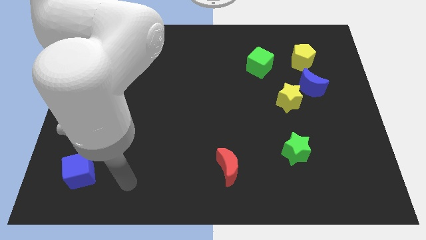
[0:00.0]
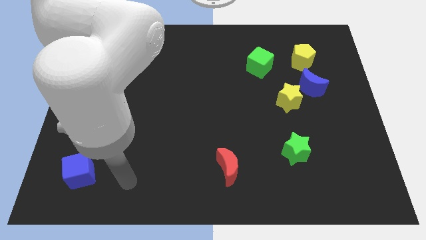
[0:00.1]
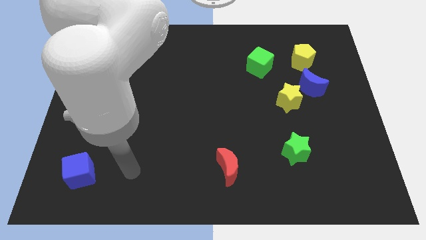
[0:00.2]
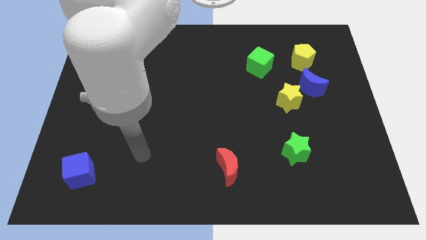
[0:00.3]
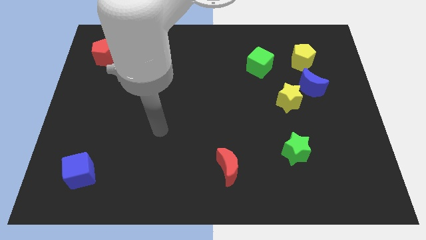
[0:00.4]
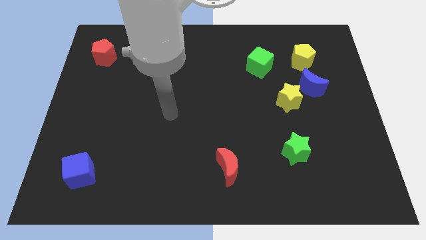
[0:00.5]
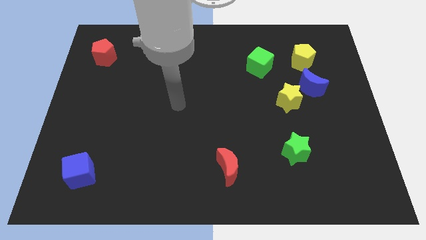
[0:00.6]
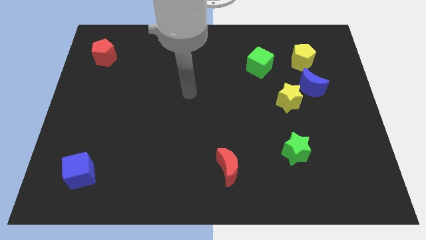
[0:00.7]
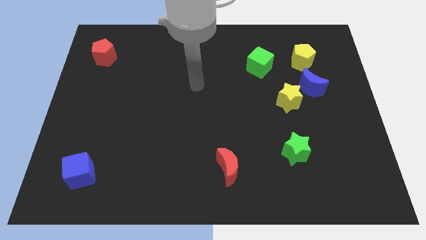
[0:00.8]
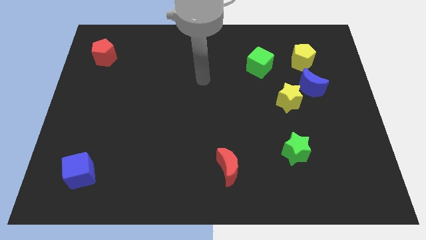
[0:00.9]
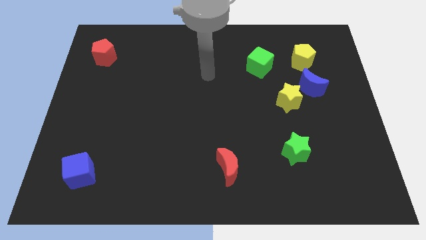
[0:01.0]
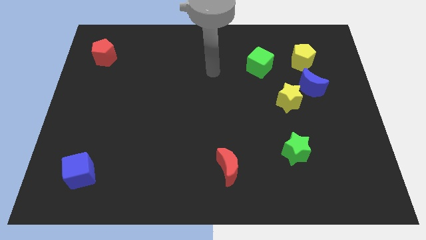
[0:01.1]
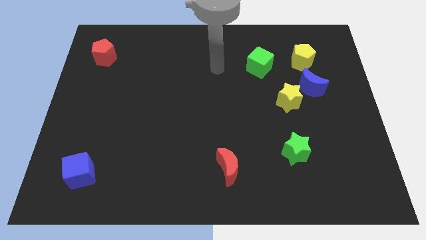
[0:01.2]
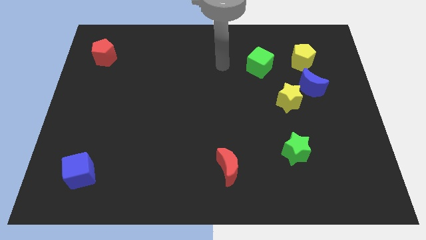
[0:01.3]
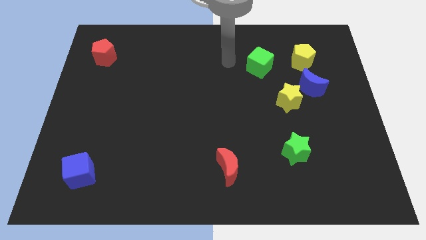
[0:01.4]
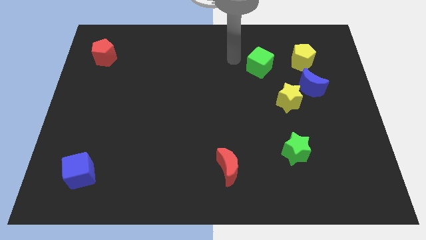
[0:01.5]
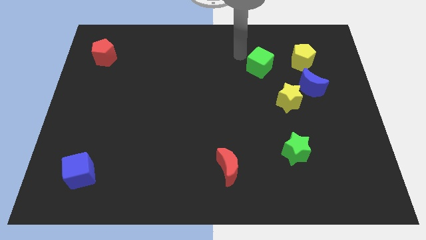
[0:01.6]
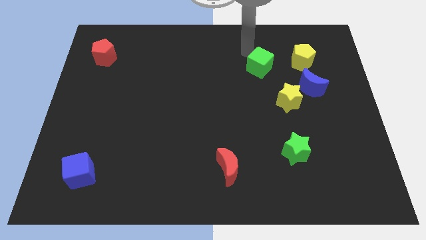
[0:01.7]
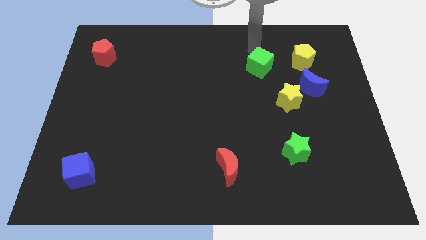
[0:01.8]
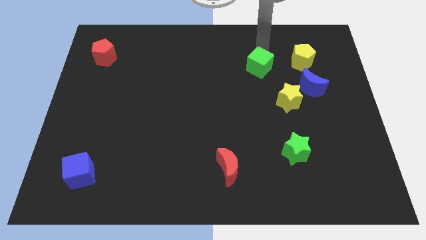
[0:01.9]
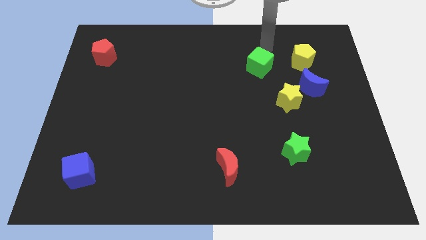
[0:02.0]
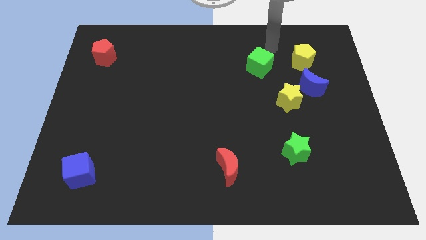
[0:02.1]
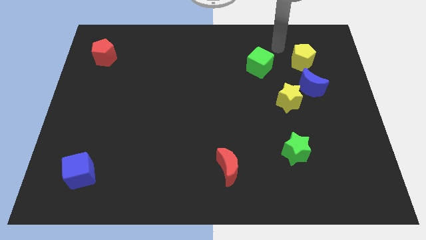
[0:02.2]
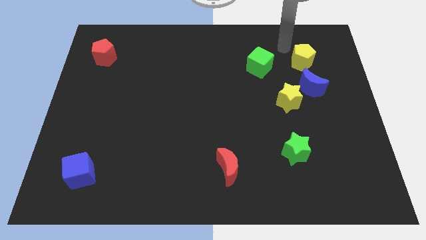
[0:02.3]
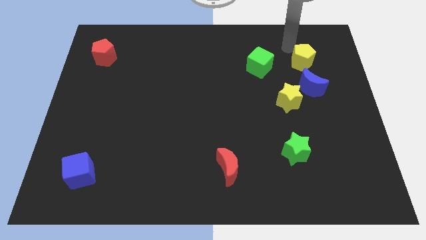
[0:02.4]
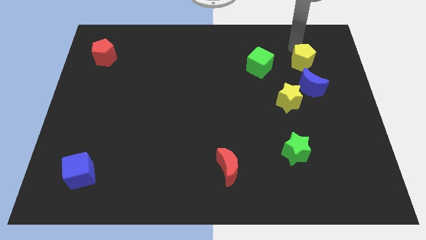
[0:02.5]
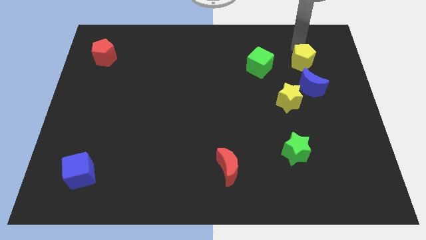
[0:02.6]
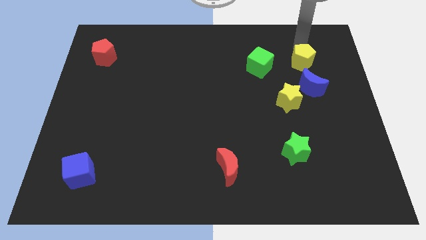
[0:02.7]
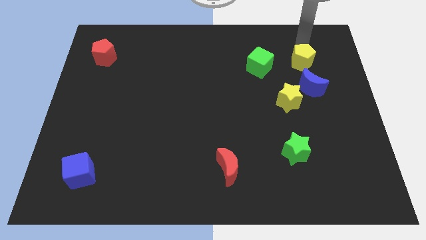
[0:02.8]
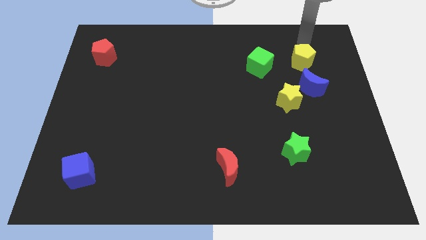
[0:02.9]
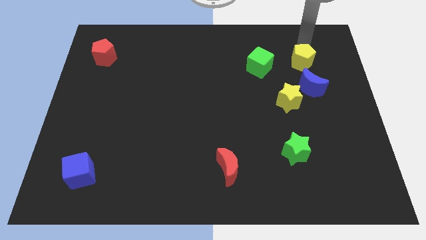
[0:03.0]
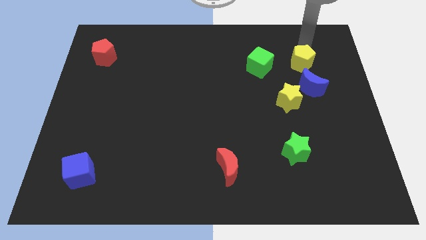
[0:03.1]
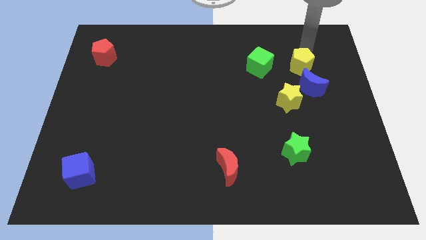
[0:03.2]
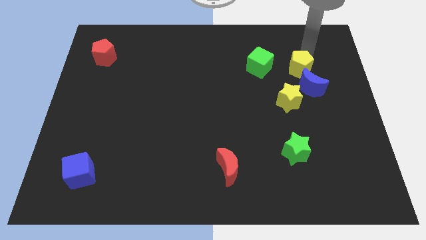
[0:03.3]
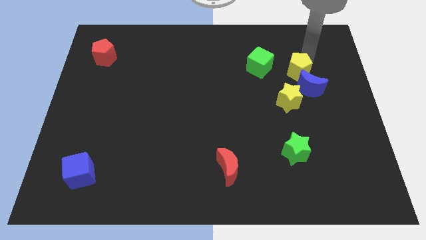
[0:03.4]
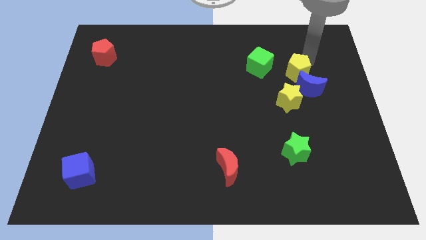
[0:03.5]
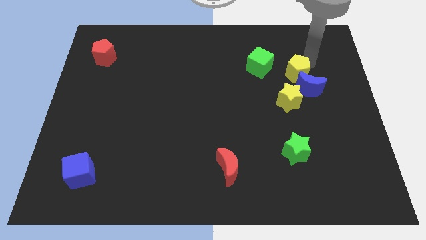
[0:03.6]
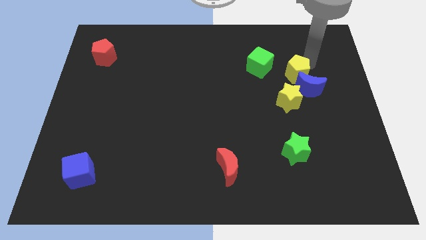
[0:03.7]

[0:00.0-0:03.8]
move the yellow pentagon next to the blue moon

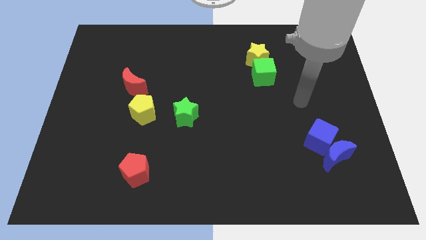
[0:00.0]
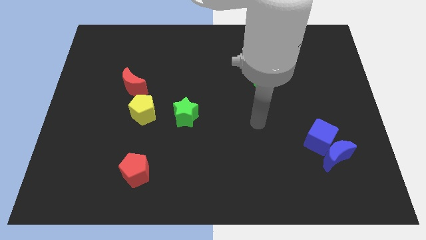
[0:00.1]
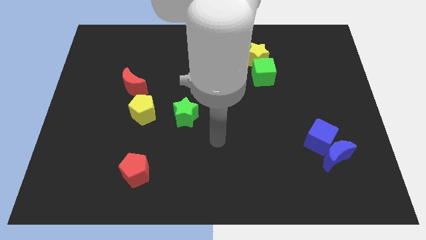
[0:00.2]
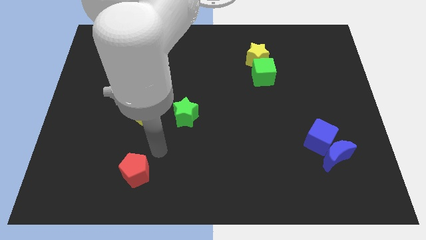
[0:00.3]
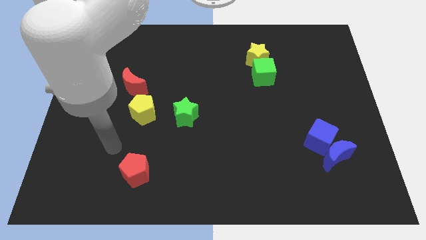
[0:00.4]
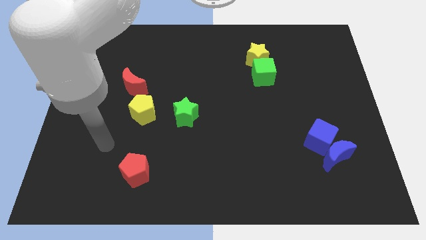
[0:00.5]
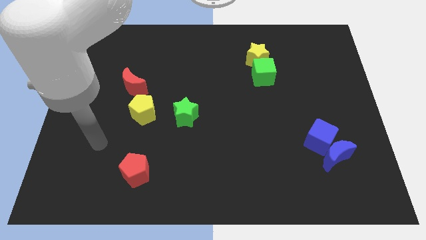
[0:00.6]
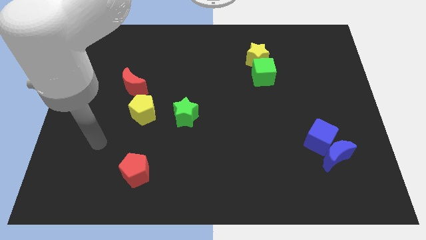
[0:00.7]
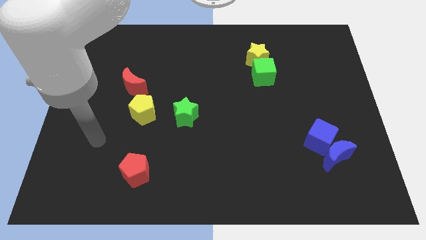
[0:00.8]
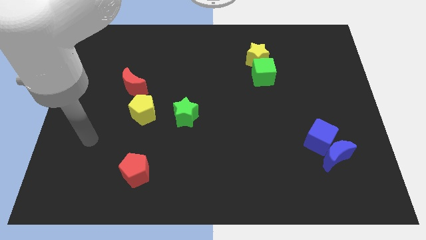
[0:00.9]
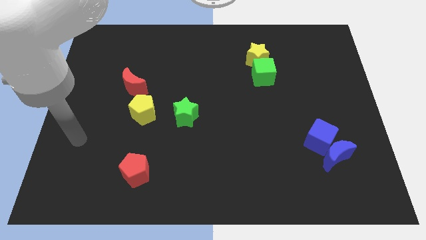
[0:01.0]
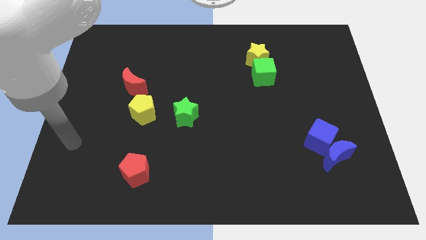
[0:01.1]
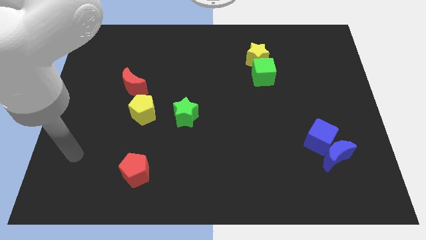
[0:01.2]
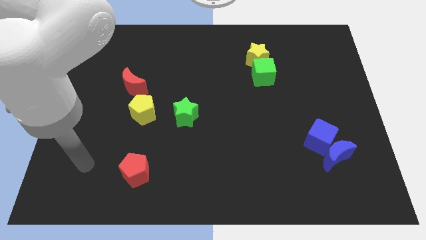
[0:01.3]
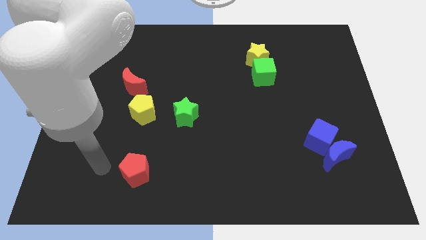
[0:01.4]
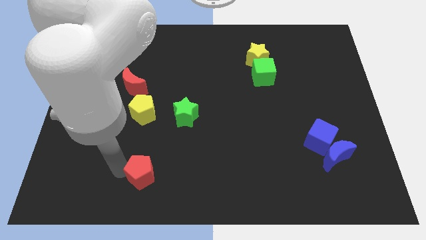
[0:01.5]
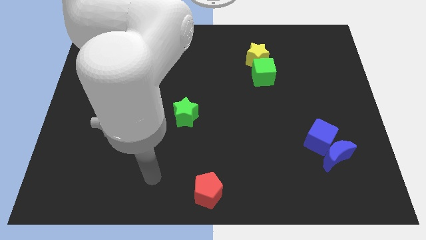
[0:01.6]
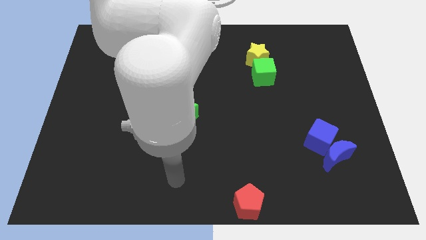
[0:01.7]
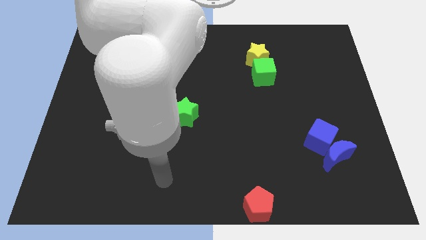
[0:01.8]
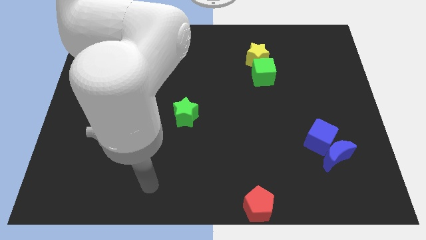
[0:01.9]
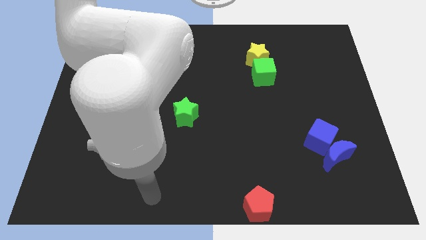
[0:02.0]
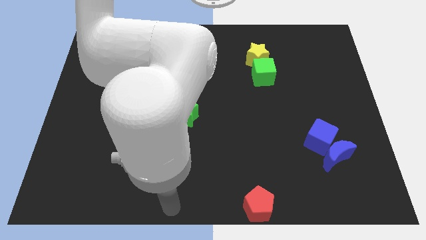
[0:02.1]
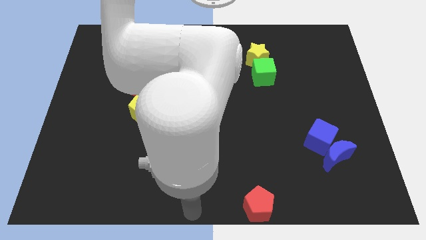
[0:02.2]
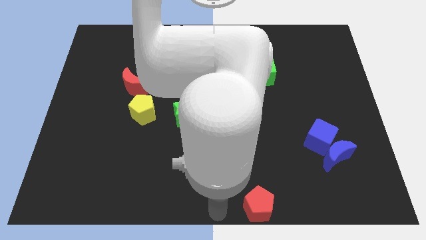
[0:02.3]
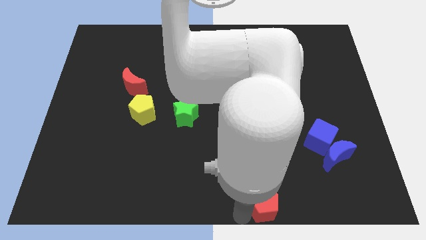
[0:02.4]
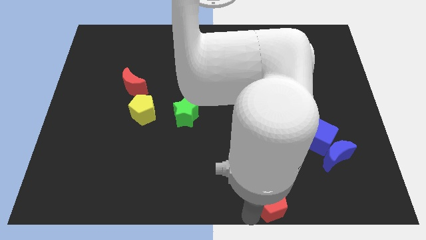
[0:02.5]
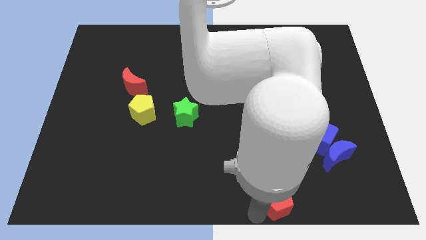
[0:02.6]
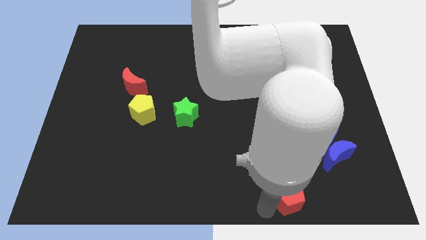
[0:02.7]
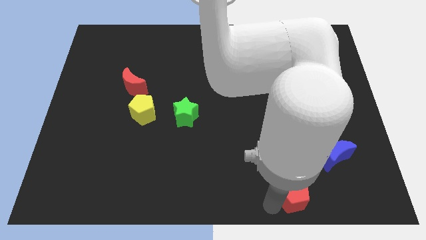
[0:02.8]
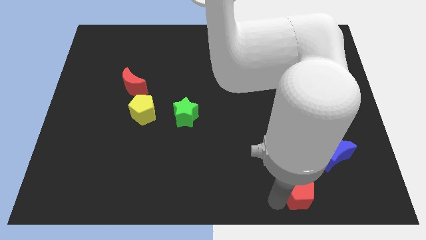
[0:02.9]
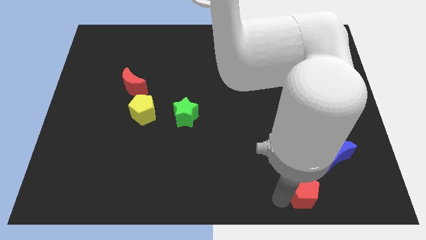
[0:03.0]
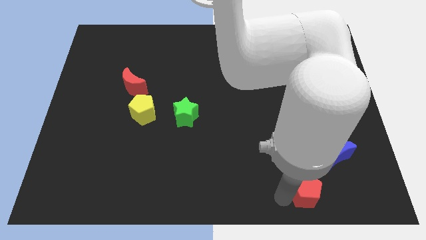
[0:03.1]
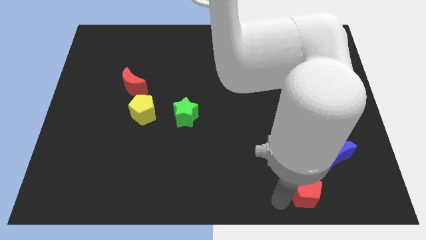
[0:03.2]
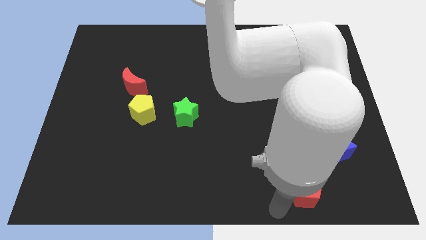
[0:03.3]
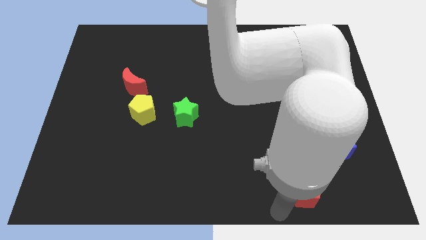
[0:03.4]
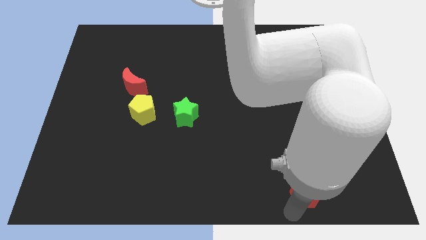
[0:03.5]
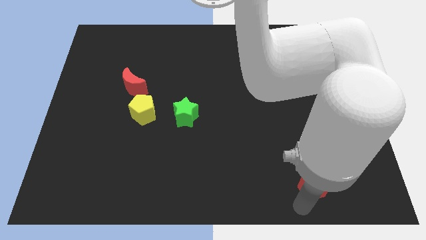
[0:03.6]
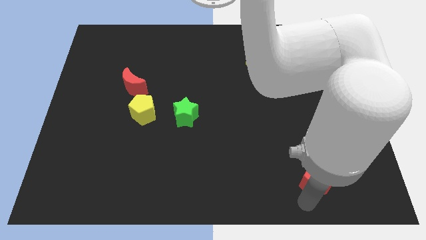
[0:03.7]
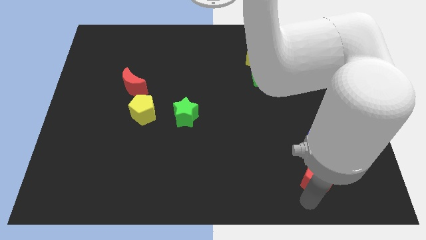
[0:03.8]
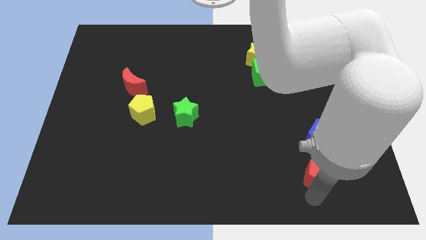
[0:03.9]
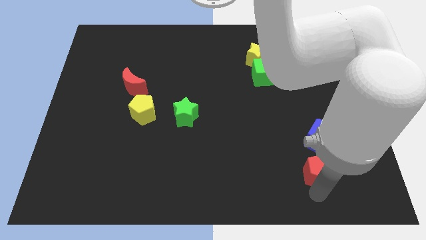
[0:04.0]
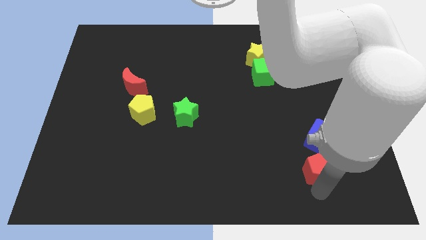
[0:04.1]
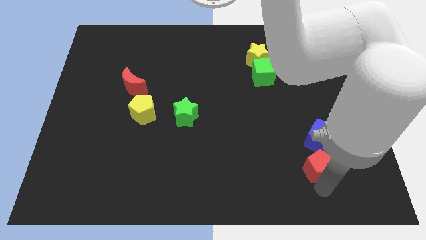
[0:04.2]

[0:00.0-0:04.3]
put the red pentagon close to the blue moon

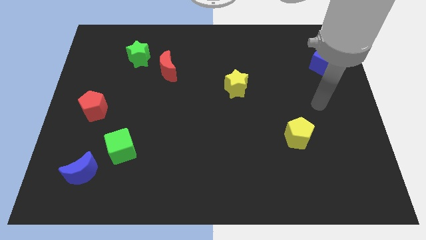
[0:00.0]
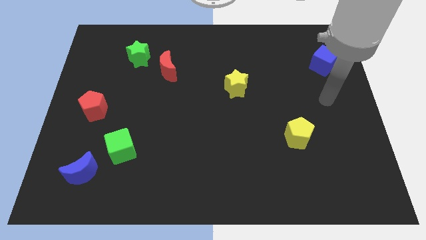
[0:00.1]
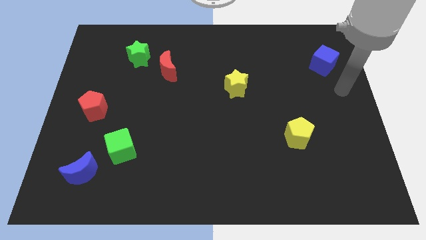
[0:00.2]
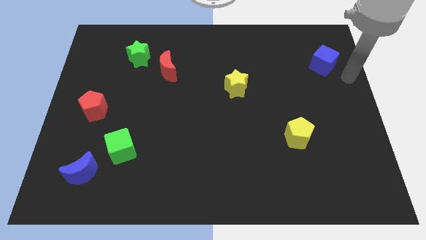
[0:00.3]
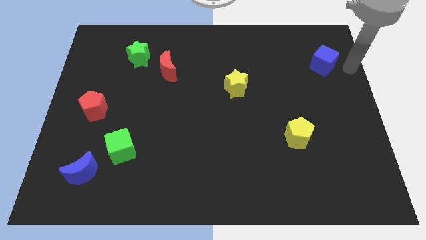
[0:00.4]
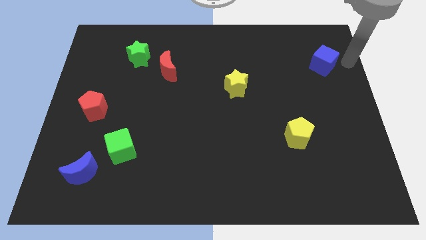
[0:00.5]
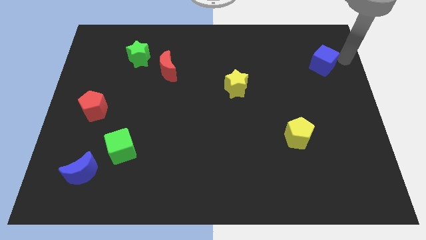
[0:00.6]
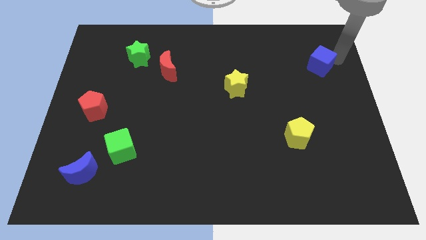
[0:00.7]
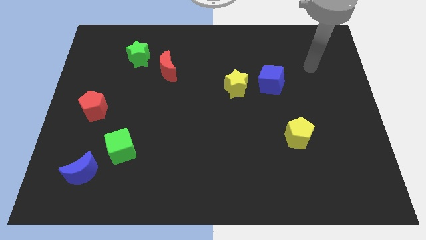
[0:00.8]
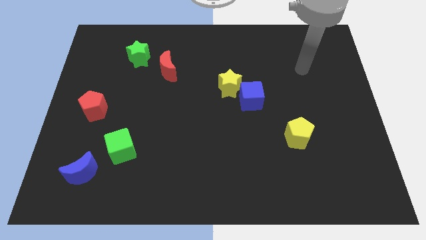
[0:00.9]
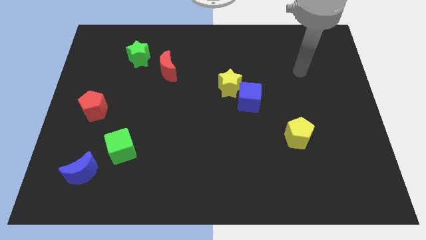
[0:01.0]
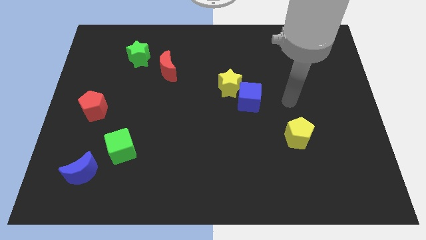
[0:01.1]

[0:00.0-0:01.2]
put the blue cube close to the yellow star
